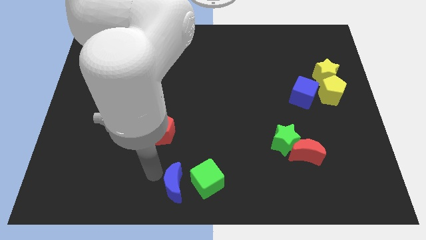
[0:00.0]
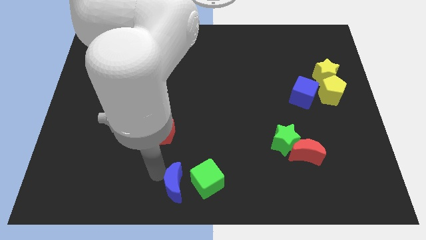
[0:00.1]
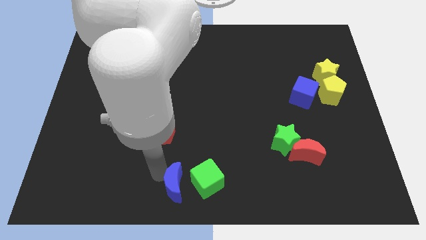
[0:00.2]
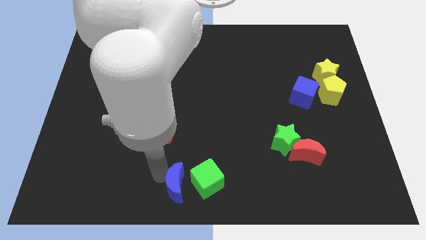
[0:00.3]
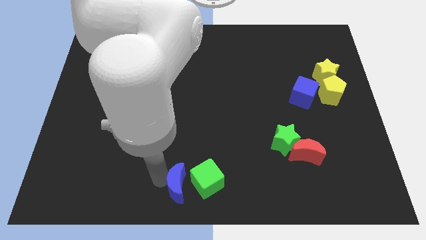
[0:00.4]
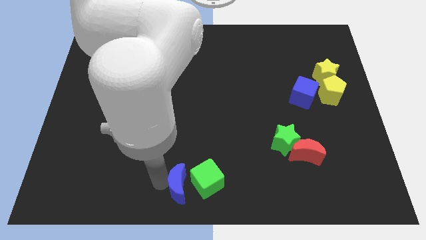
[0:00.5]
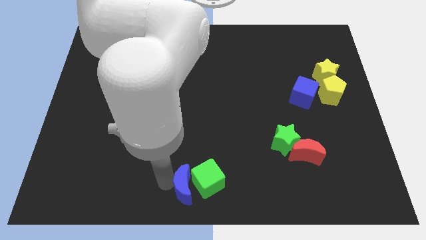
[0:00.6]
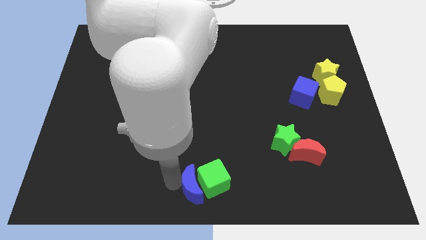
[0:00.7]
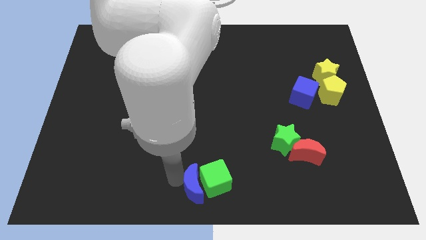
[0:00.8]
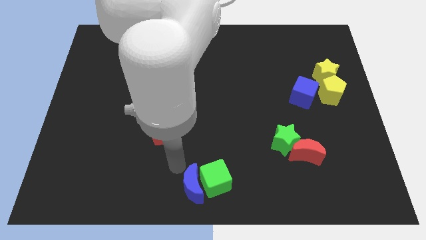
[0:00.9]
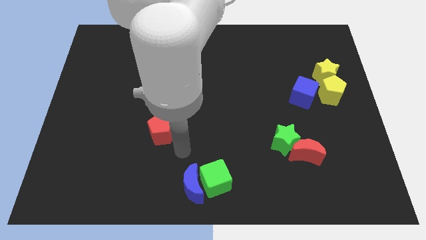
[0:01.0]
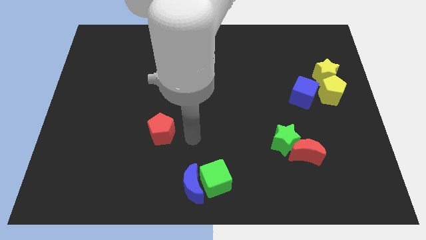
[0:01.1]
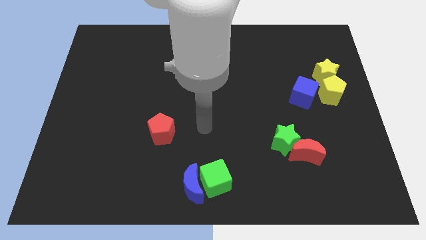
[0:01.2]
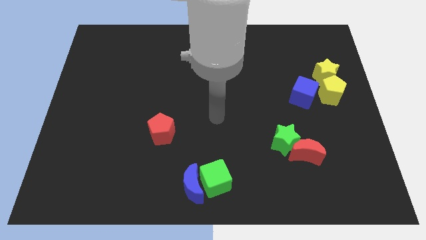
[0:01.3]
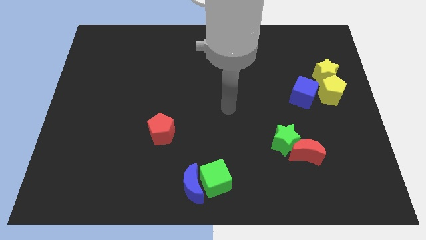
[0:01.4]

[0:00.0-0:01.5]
drag the blue moon close to the green cube

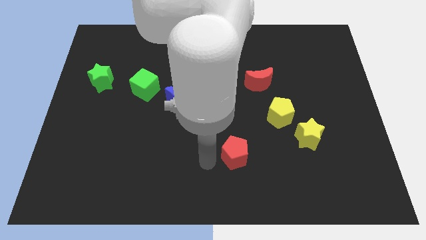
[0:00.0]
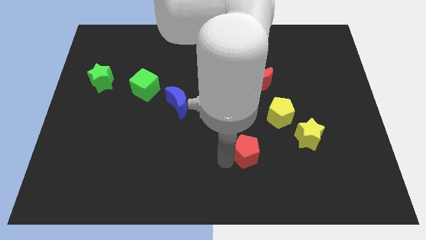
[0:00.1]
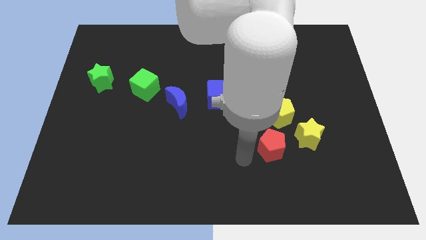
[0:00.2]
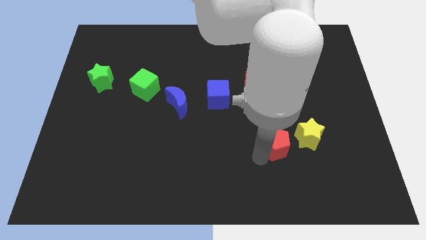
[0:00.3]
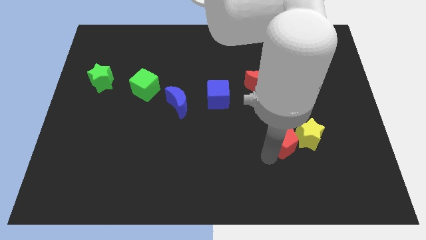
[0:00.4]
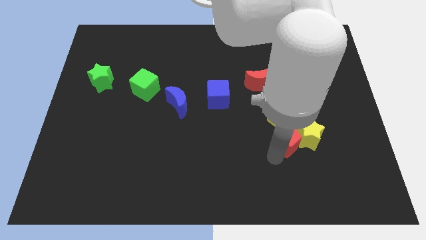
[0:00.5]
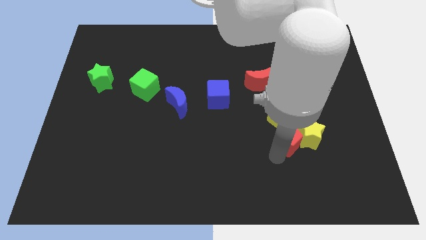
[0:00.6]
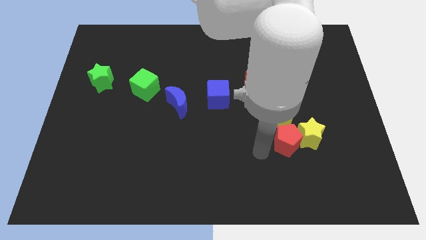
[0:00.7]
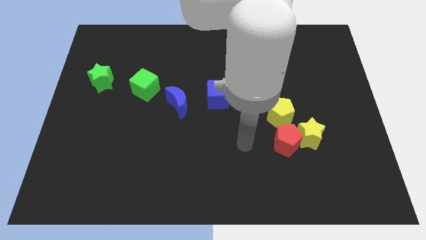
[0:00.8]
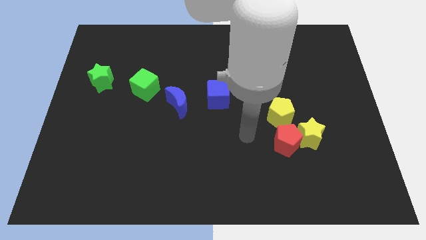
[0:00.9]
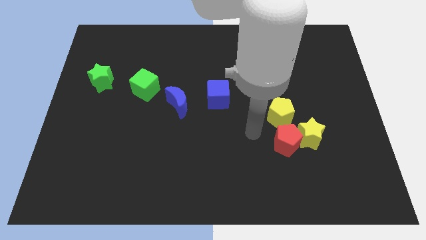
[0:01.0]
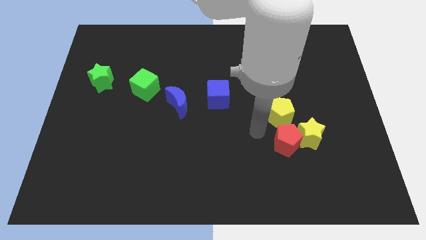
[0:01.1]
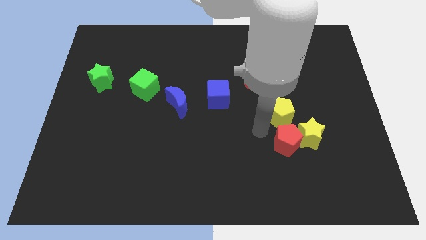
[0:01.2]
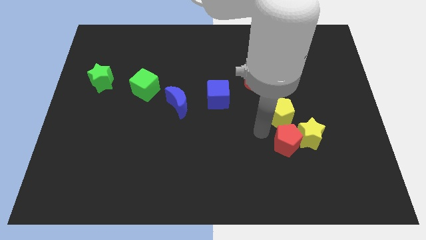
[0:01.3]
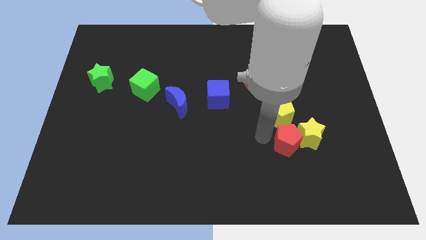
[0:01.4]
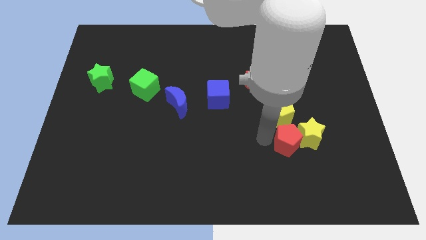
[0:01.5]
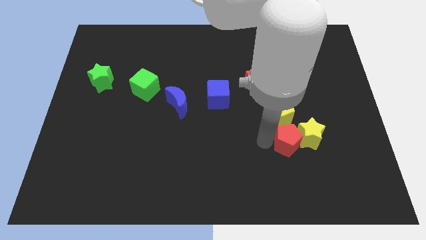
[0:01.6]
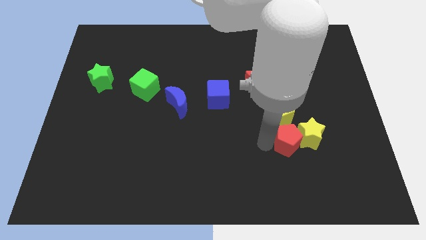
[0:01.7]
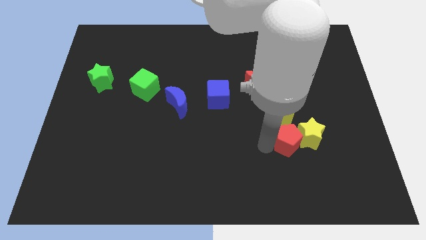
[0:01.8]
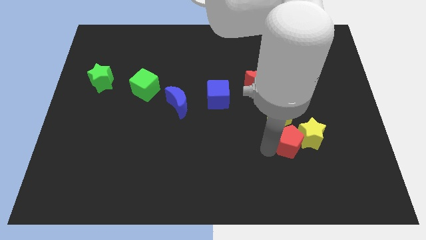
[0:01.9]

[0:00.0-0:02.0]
push the red pentagon into the yellow star

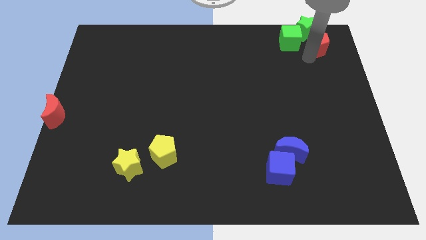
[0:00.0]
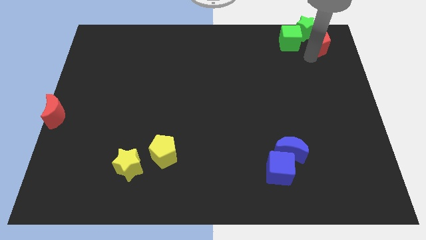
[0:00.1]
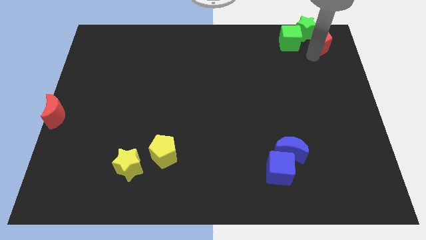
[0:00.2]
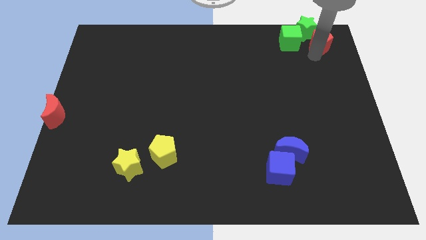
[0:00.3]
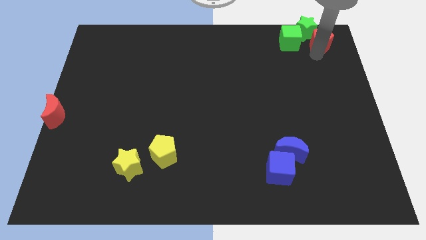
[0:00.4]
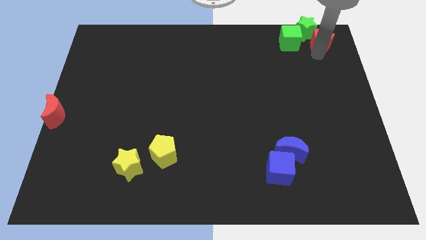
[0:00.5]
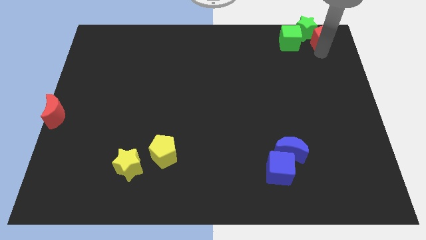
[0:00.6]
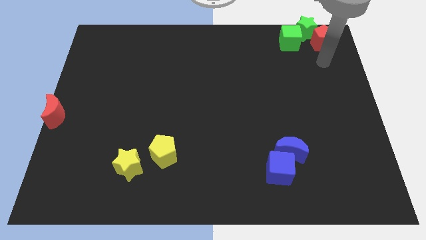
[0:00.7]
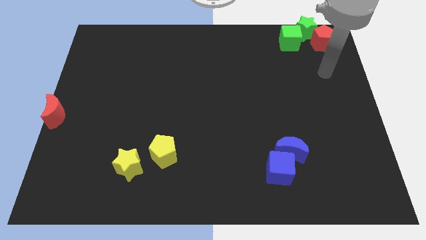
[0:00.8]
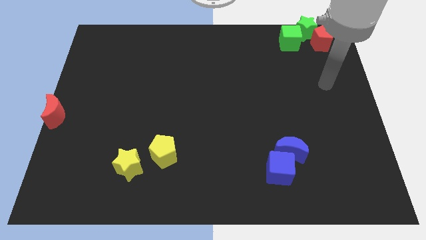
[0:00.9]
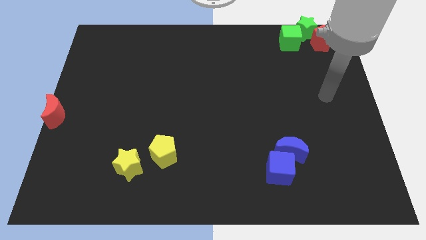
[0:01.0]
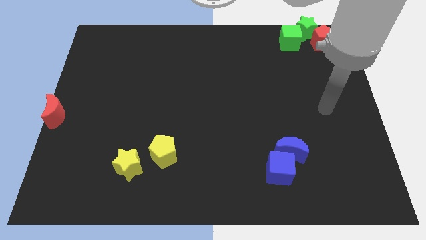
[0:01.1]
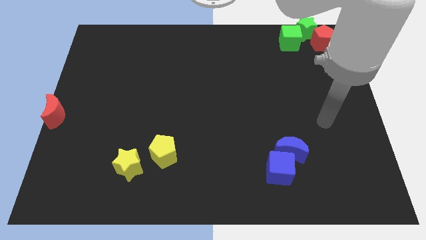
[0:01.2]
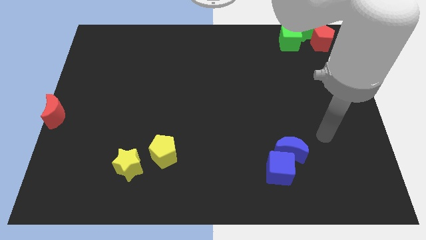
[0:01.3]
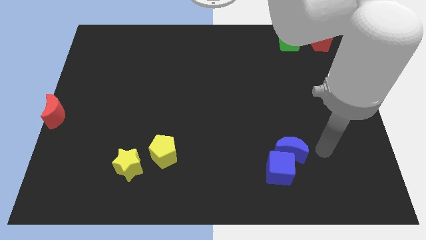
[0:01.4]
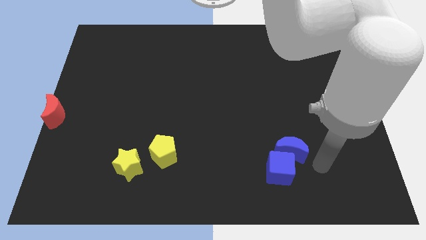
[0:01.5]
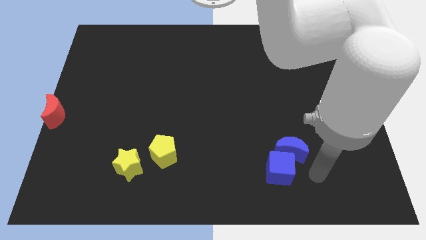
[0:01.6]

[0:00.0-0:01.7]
move the red pentagon into the green star

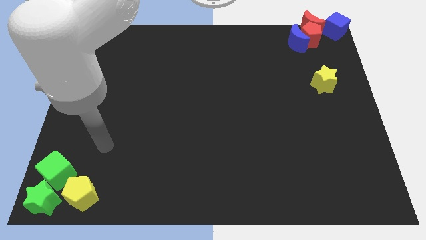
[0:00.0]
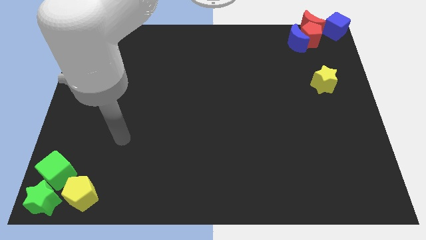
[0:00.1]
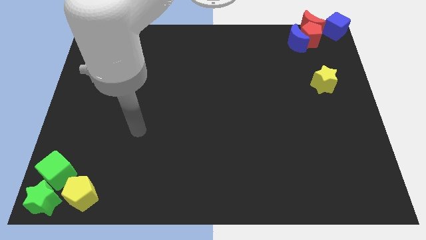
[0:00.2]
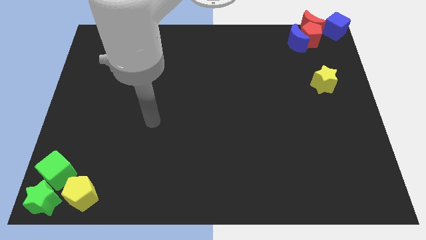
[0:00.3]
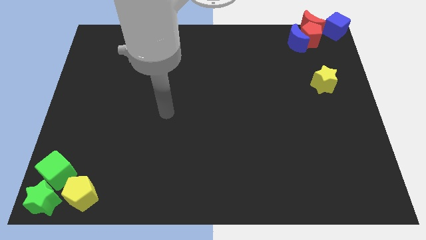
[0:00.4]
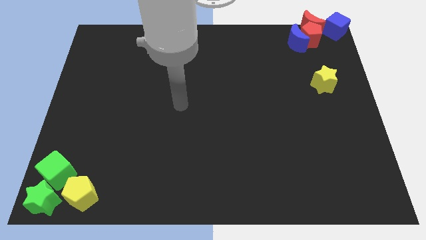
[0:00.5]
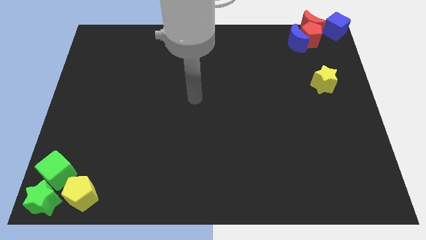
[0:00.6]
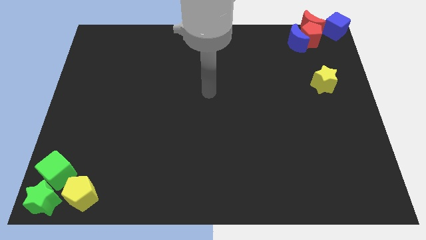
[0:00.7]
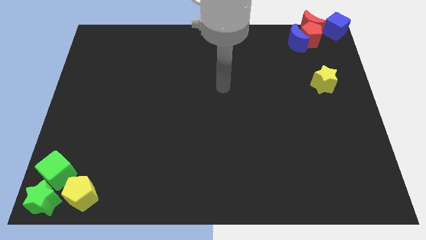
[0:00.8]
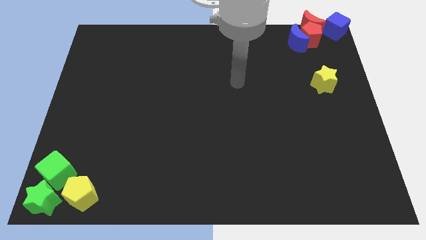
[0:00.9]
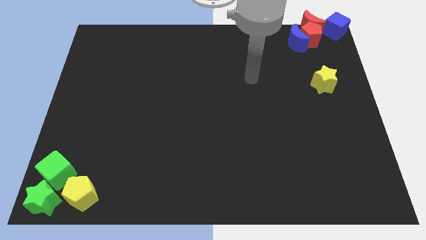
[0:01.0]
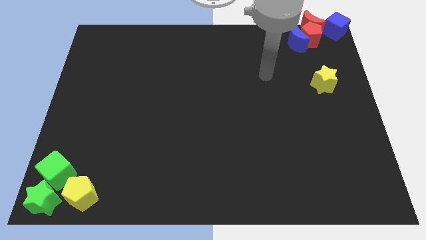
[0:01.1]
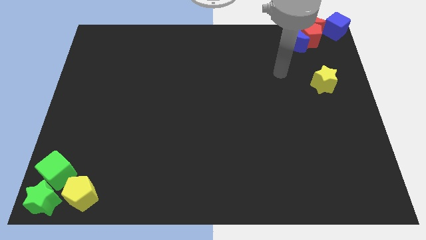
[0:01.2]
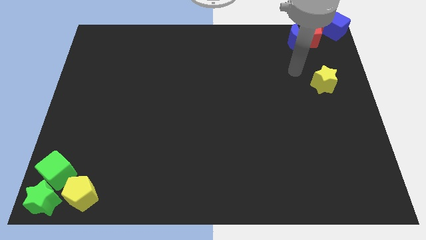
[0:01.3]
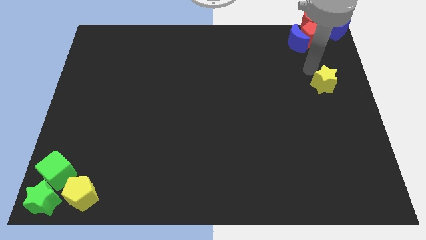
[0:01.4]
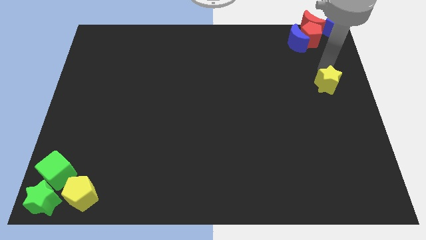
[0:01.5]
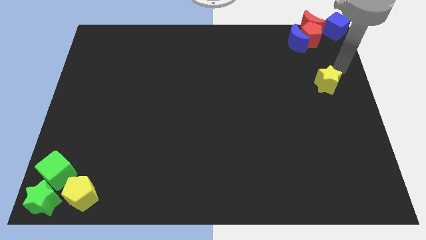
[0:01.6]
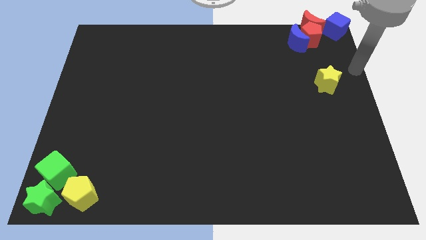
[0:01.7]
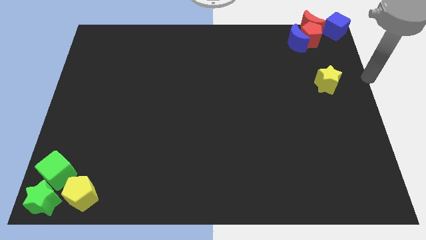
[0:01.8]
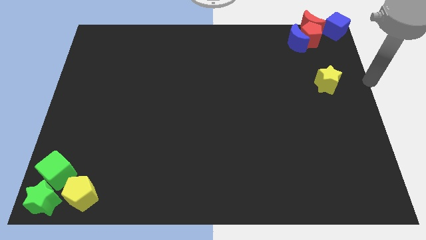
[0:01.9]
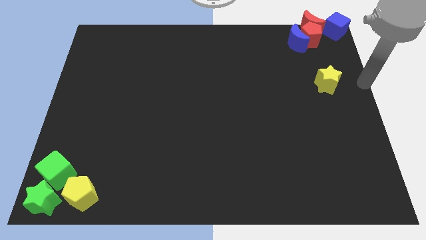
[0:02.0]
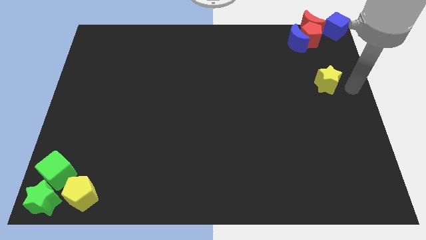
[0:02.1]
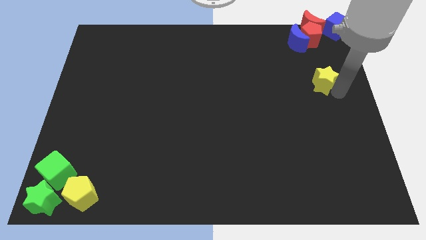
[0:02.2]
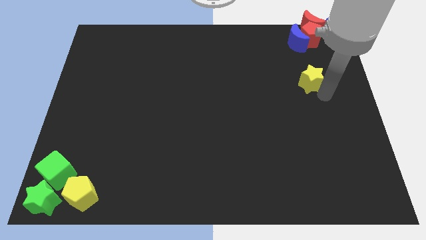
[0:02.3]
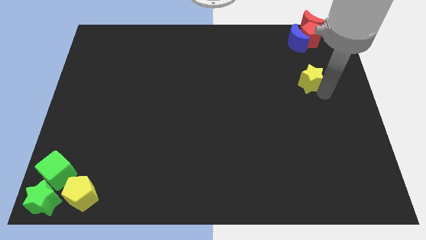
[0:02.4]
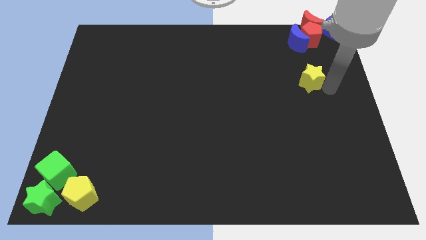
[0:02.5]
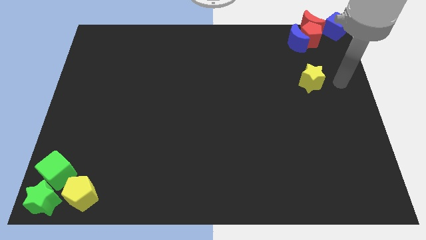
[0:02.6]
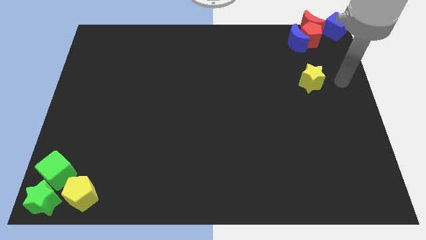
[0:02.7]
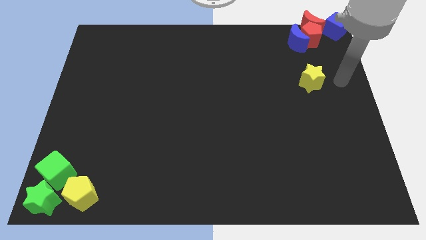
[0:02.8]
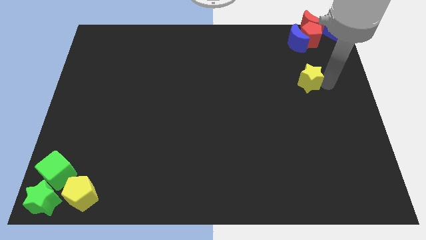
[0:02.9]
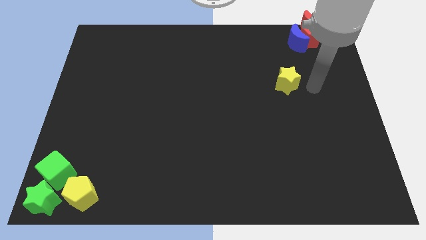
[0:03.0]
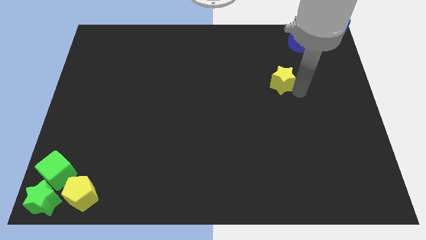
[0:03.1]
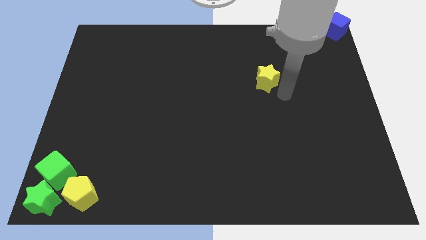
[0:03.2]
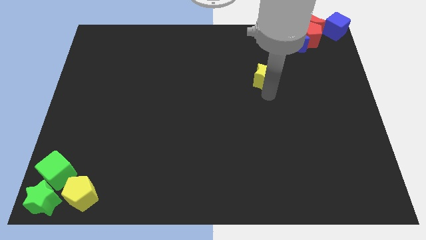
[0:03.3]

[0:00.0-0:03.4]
drag the yellow star towards the green blocks

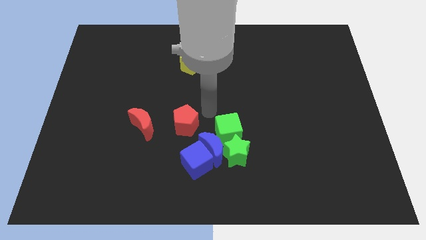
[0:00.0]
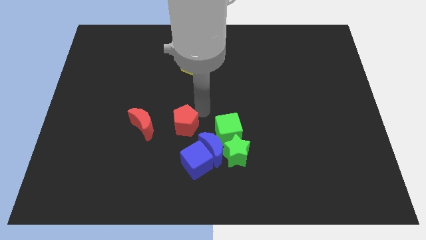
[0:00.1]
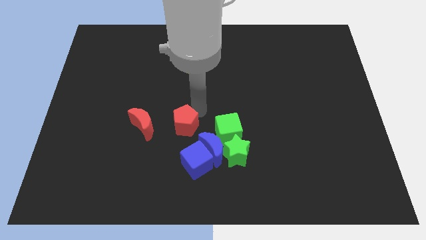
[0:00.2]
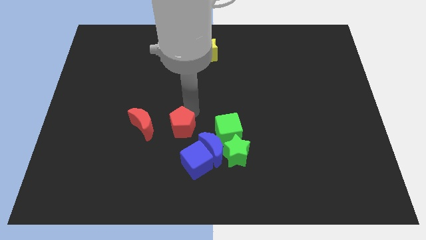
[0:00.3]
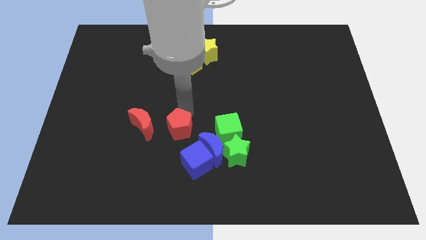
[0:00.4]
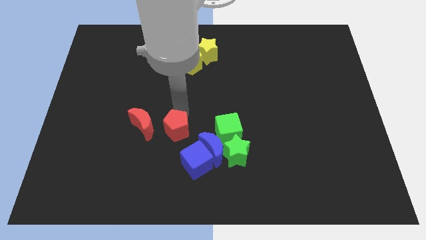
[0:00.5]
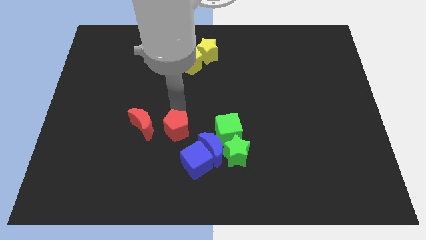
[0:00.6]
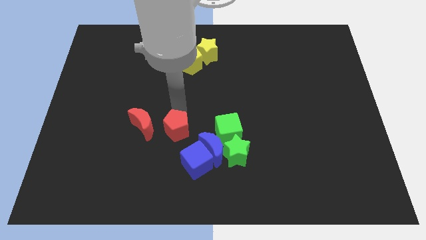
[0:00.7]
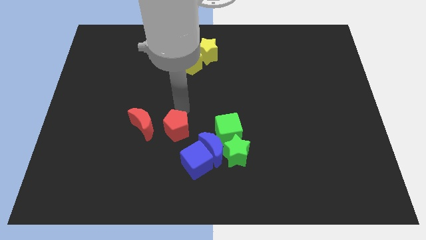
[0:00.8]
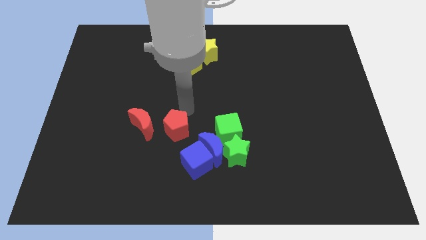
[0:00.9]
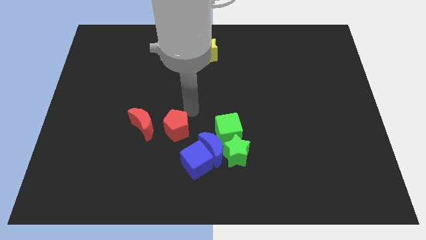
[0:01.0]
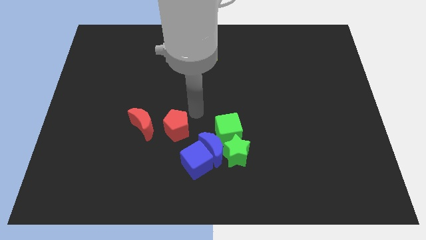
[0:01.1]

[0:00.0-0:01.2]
move the red pentagon on top of the blue cube
